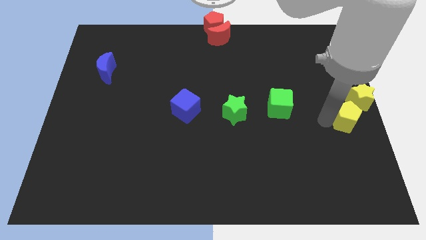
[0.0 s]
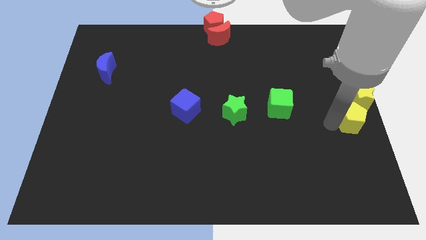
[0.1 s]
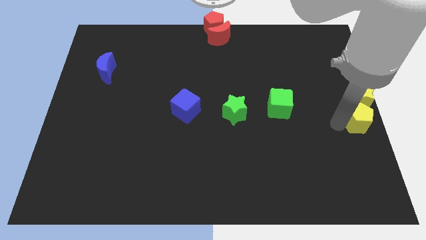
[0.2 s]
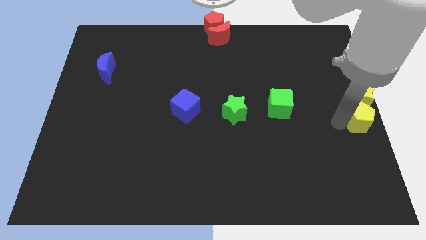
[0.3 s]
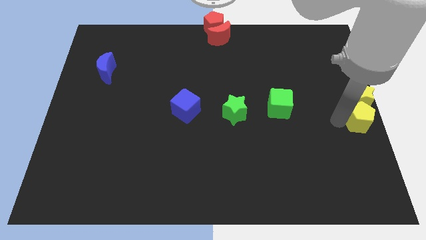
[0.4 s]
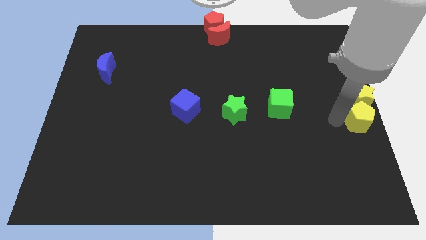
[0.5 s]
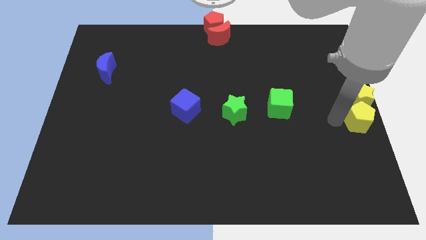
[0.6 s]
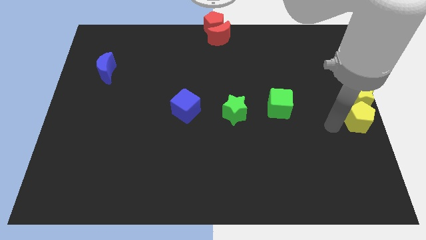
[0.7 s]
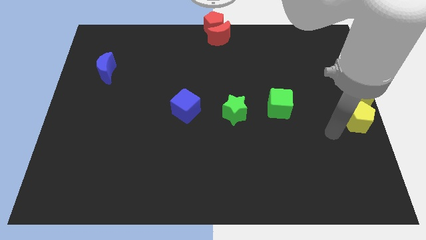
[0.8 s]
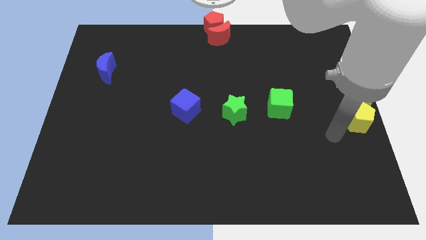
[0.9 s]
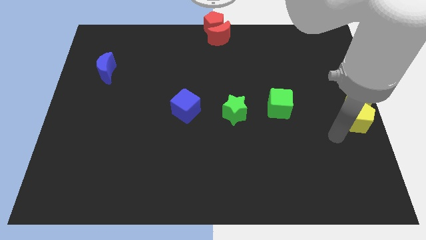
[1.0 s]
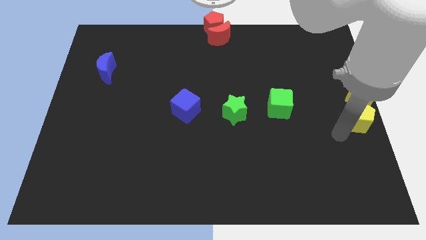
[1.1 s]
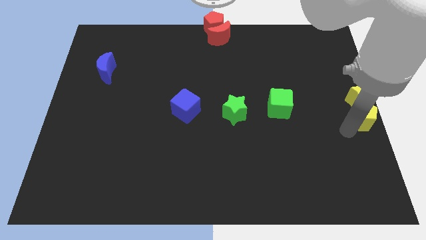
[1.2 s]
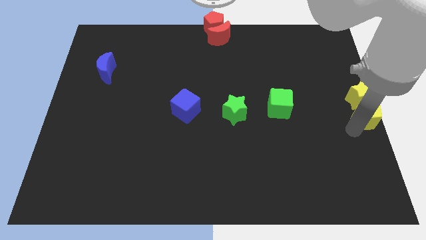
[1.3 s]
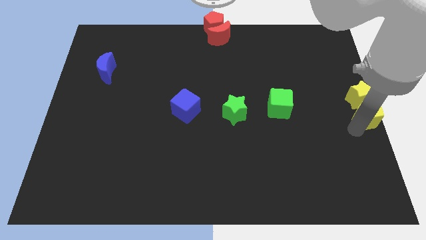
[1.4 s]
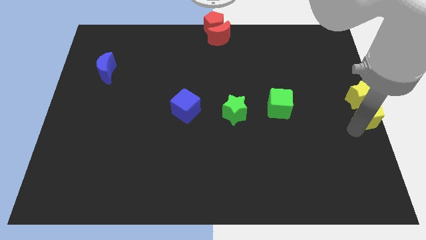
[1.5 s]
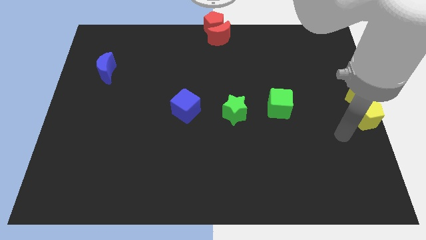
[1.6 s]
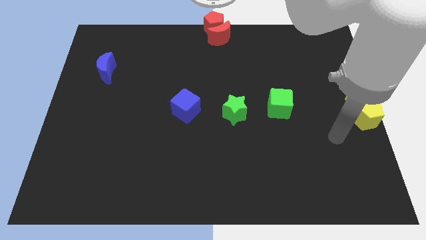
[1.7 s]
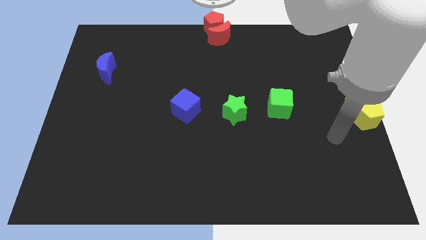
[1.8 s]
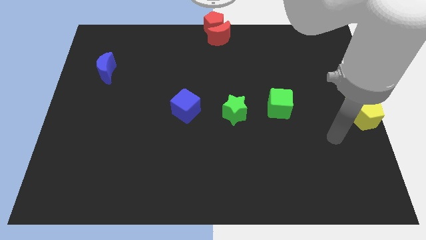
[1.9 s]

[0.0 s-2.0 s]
place the yellow pentagon below the yellow star

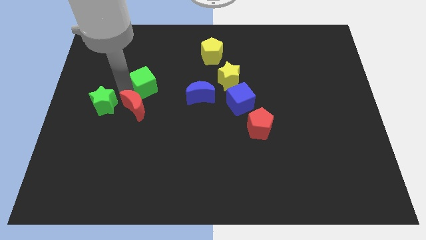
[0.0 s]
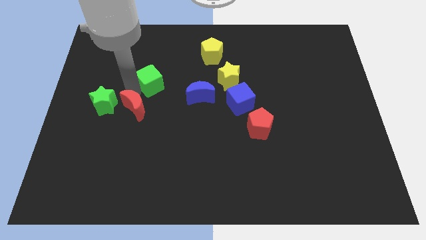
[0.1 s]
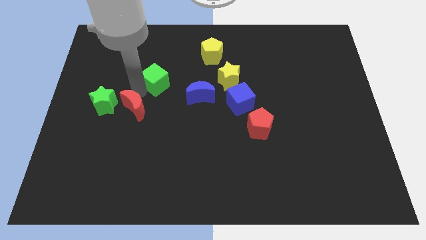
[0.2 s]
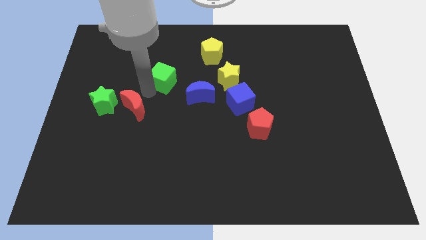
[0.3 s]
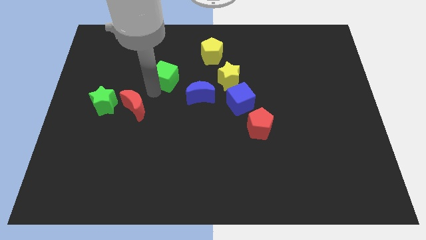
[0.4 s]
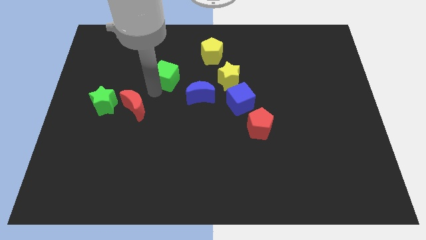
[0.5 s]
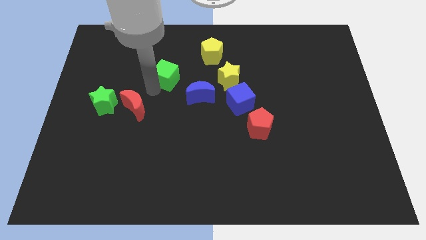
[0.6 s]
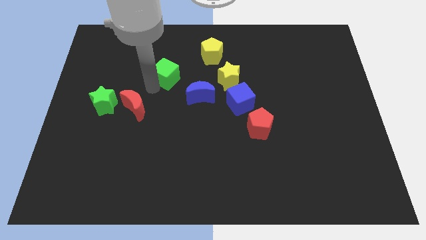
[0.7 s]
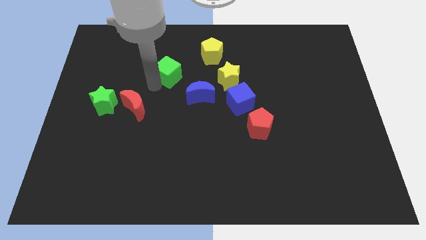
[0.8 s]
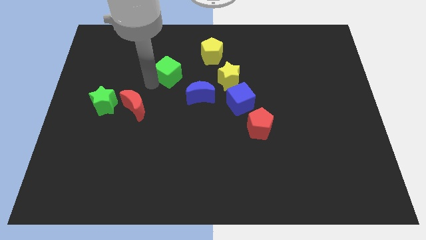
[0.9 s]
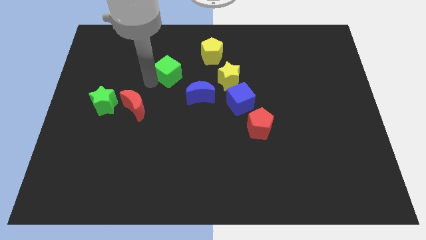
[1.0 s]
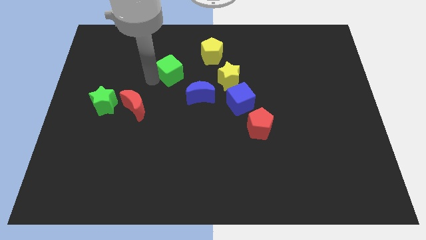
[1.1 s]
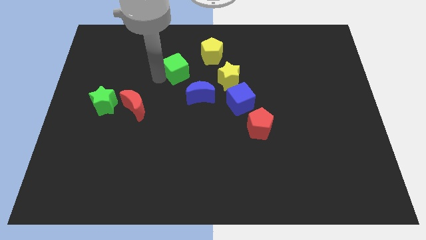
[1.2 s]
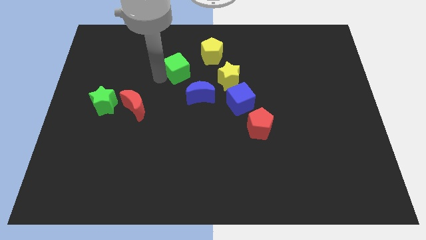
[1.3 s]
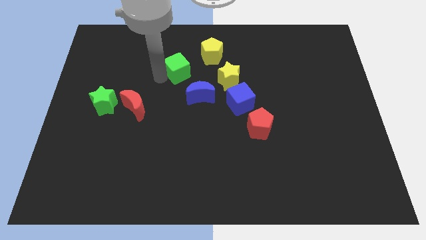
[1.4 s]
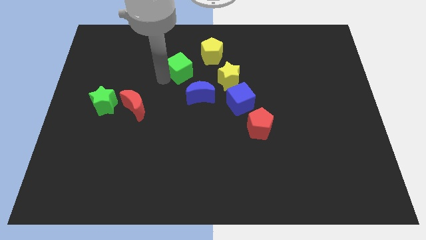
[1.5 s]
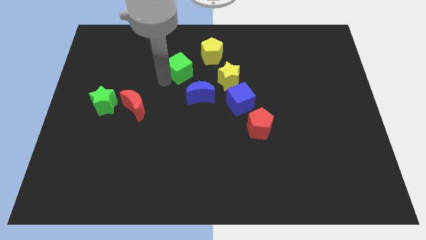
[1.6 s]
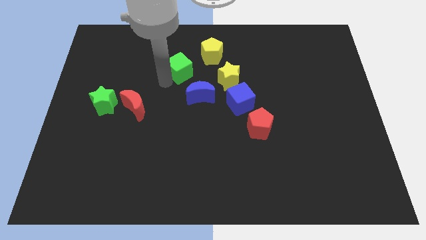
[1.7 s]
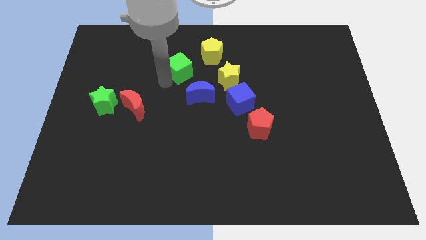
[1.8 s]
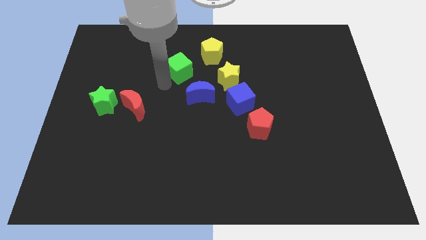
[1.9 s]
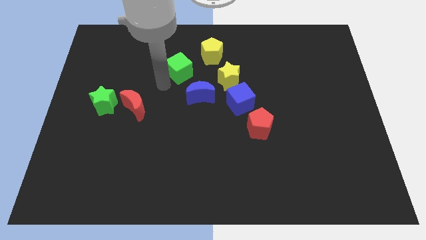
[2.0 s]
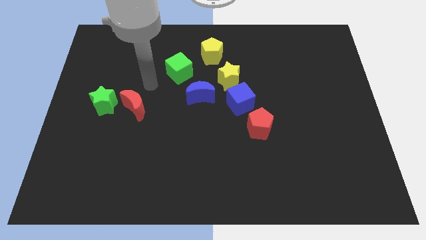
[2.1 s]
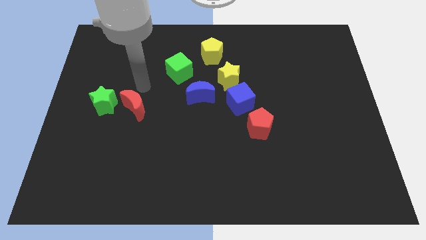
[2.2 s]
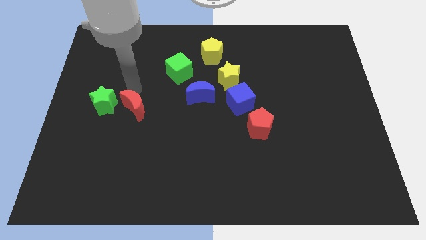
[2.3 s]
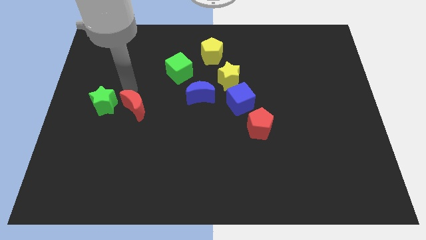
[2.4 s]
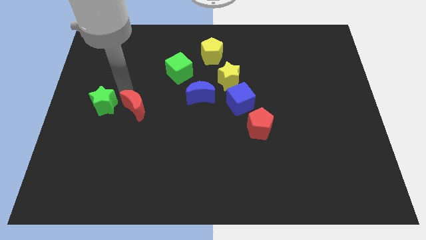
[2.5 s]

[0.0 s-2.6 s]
move the green cube to the bottom left of the yellow pentagon

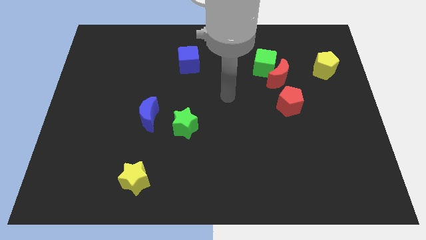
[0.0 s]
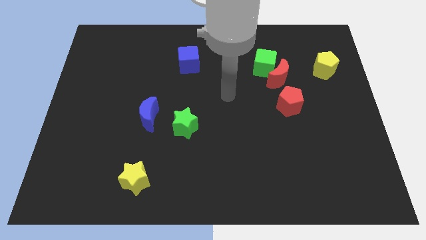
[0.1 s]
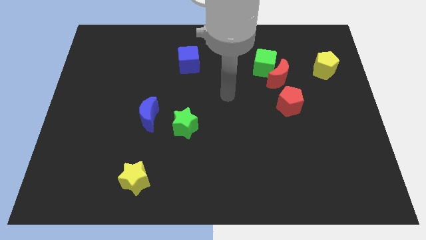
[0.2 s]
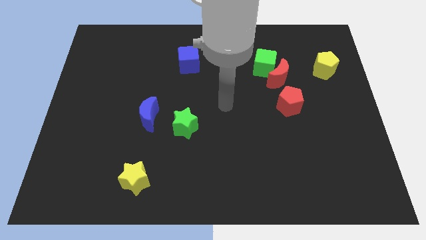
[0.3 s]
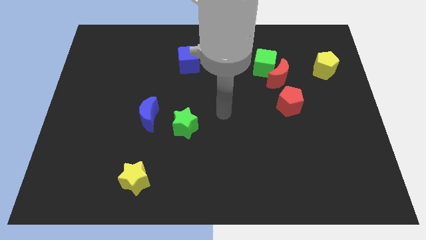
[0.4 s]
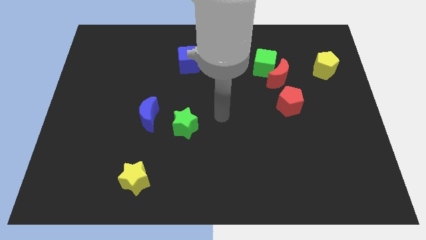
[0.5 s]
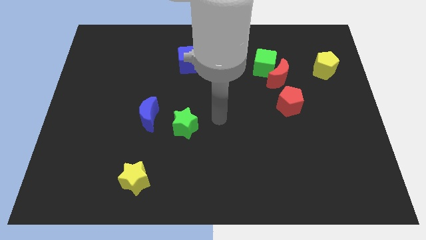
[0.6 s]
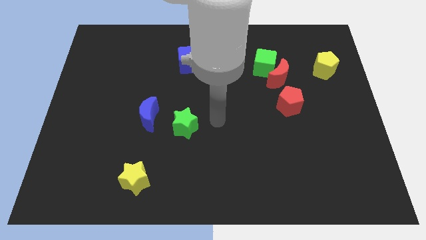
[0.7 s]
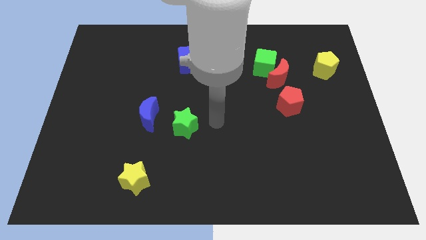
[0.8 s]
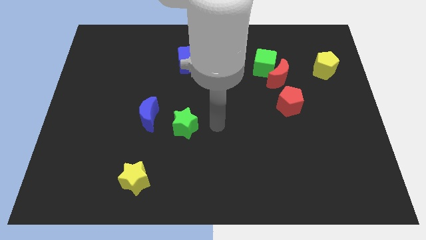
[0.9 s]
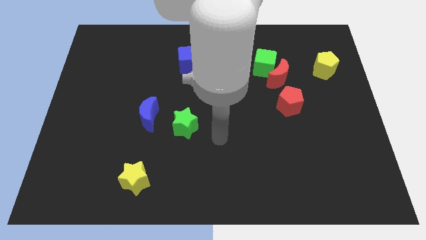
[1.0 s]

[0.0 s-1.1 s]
point your arm at the right of the green star

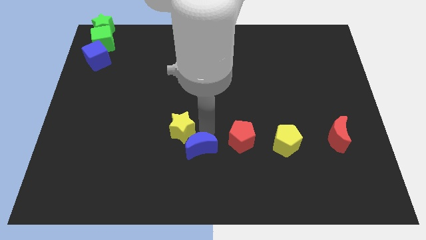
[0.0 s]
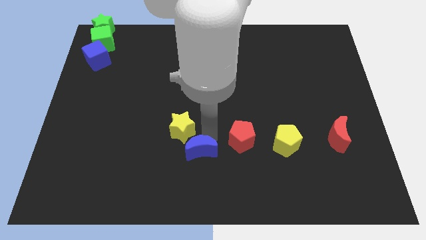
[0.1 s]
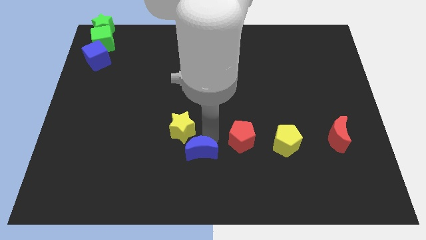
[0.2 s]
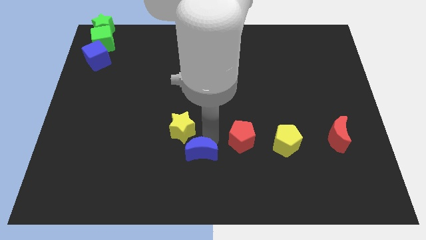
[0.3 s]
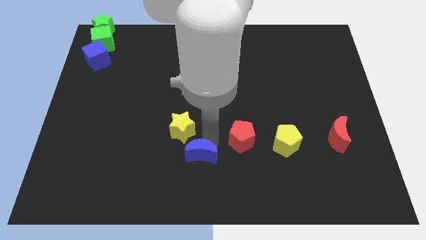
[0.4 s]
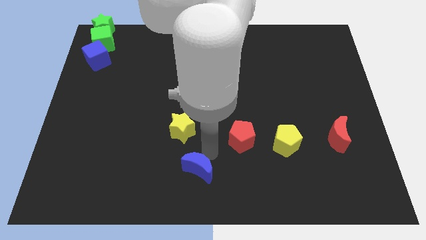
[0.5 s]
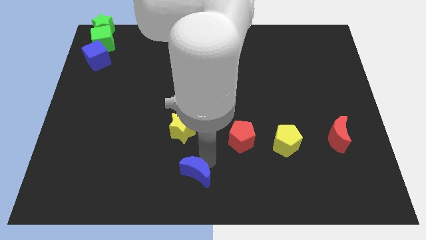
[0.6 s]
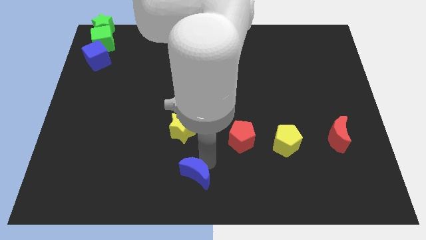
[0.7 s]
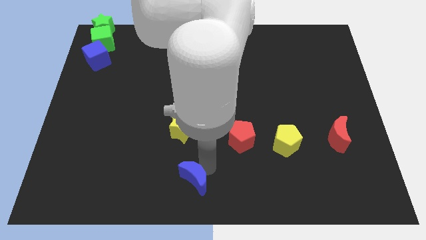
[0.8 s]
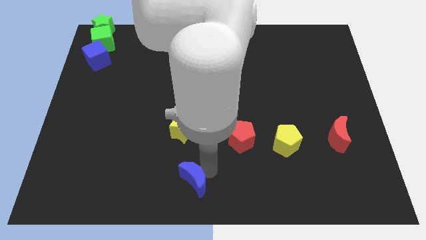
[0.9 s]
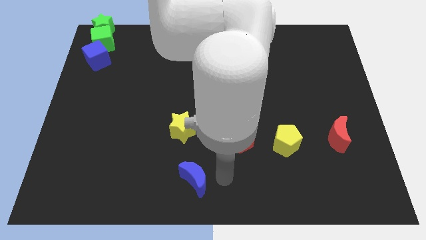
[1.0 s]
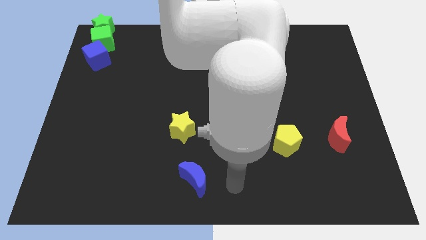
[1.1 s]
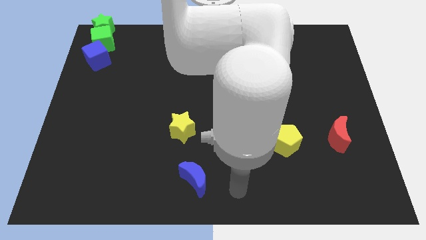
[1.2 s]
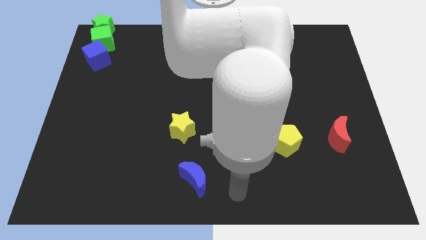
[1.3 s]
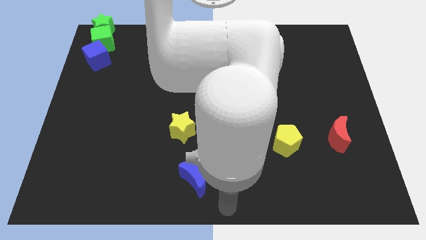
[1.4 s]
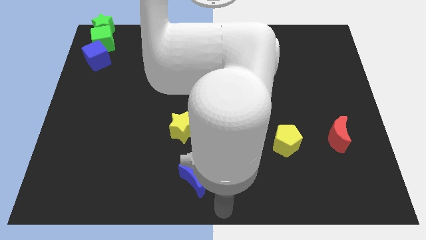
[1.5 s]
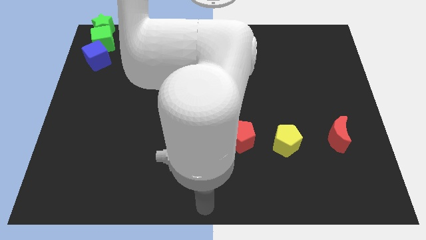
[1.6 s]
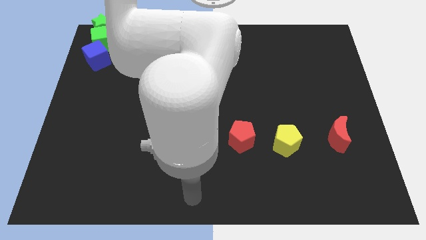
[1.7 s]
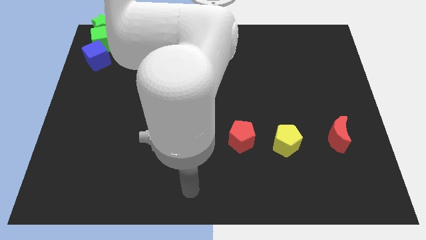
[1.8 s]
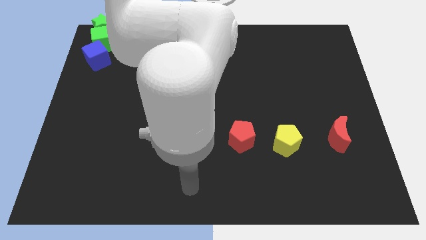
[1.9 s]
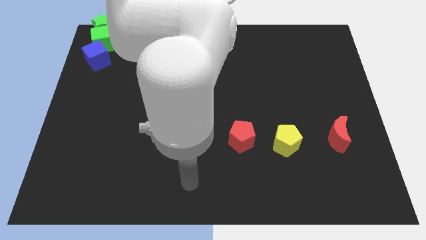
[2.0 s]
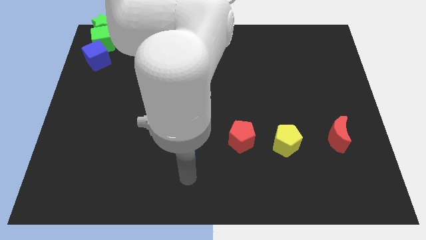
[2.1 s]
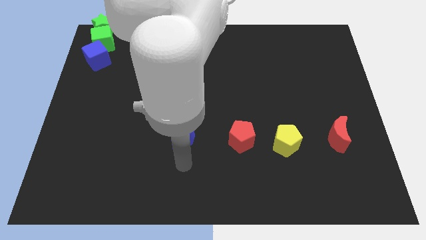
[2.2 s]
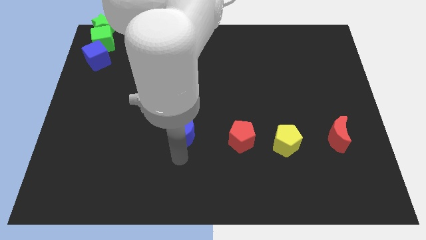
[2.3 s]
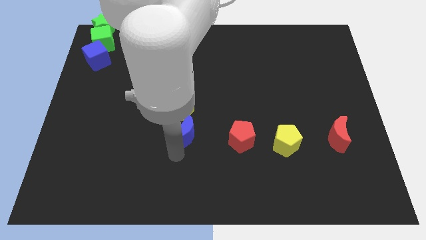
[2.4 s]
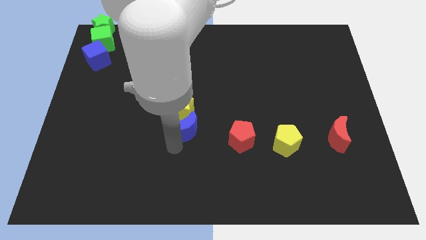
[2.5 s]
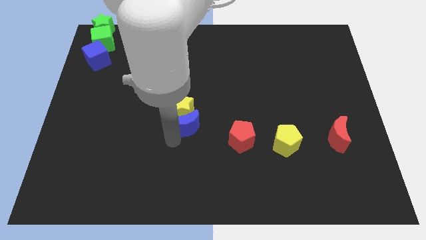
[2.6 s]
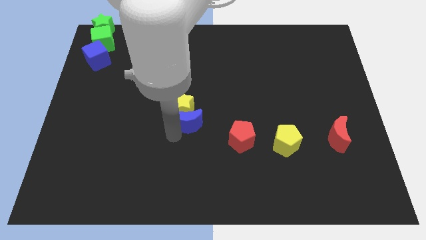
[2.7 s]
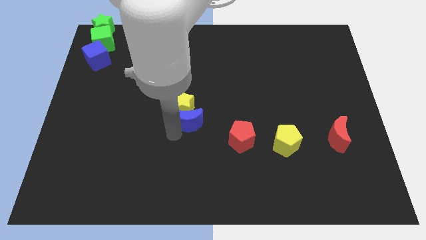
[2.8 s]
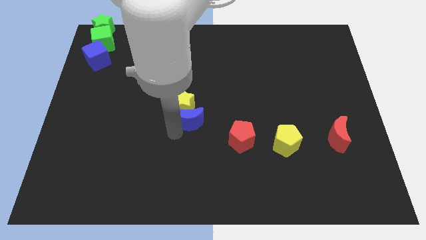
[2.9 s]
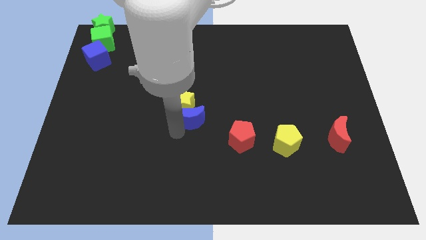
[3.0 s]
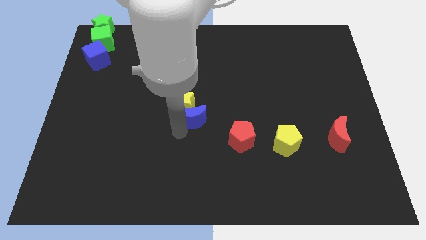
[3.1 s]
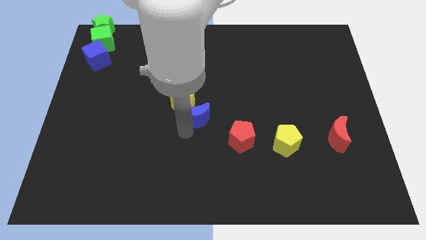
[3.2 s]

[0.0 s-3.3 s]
push the blue moon and yellow star towards the center of the board
